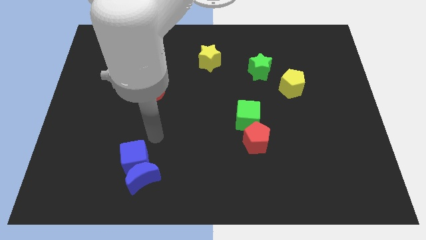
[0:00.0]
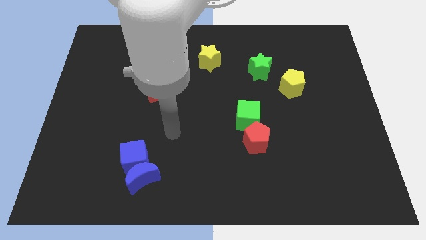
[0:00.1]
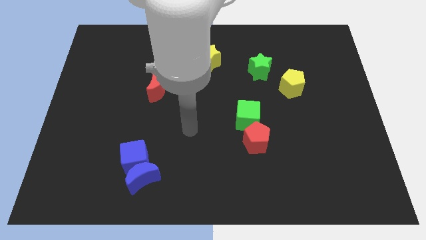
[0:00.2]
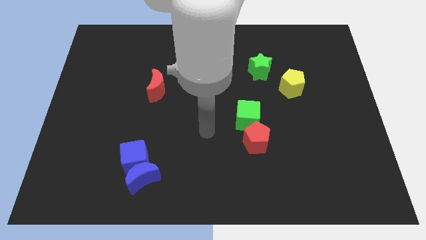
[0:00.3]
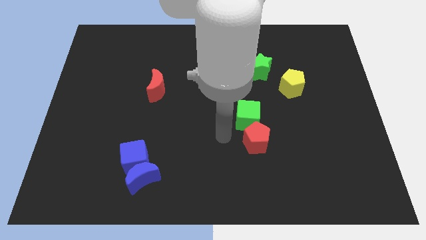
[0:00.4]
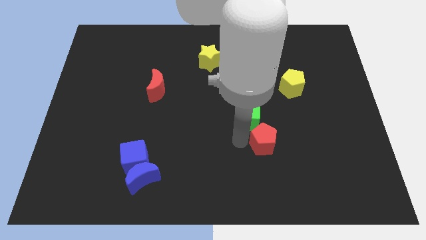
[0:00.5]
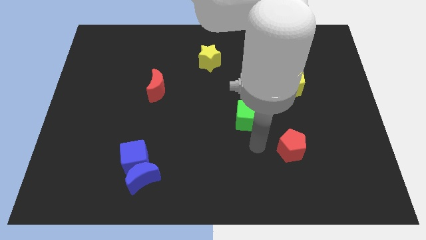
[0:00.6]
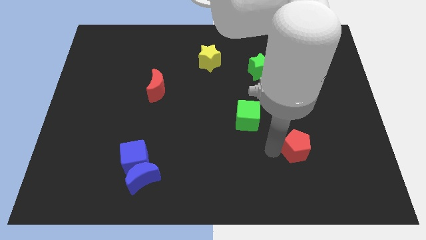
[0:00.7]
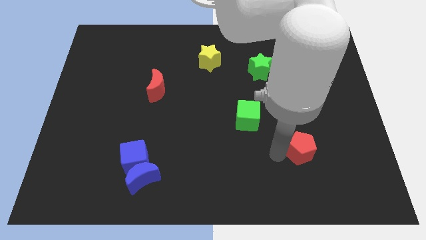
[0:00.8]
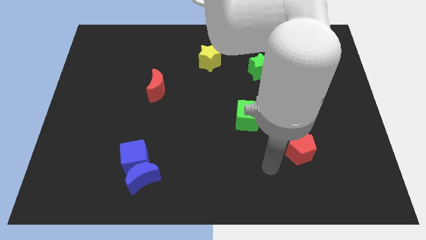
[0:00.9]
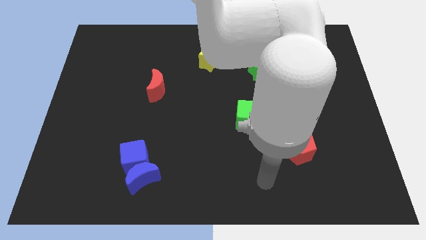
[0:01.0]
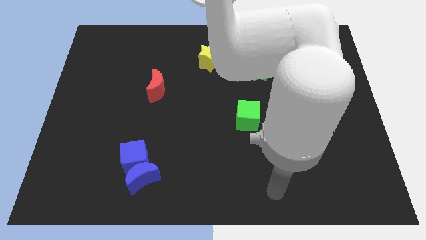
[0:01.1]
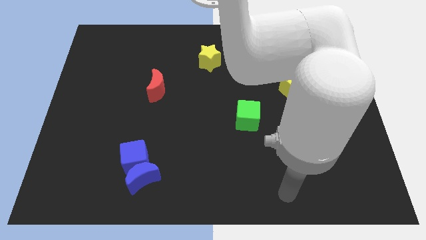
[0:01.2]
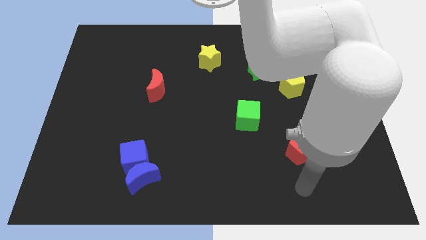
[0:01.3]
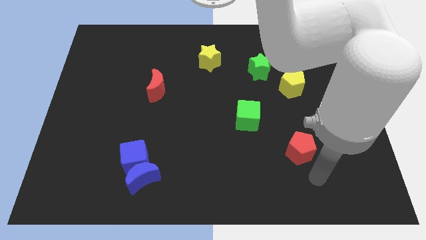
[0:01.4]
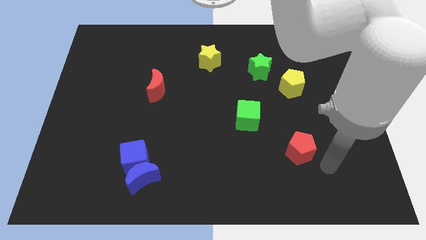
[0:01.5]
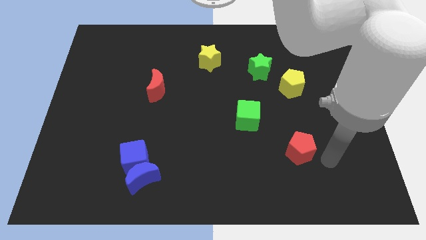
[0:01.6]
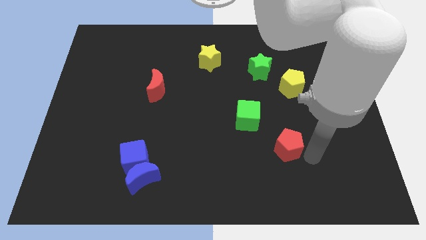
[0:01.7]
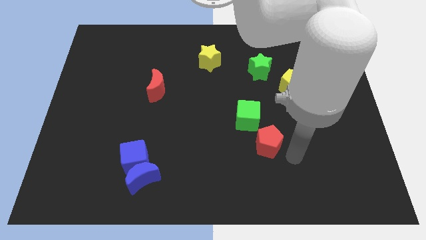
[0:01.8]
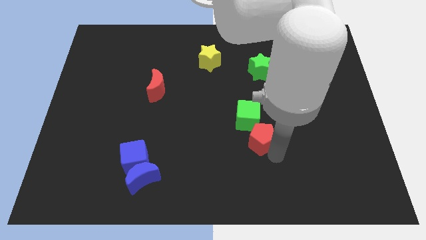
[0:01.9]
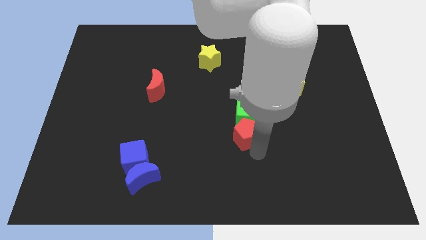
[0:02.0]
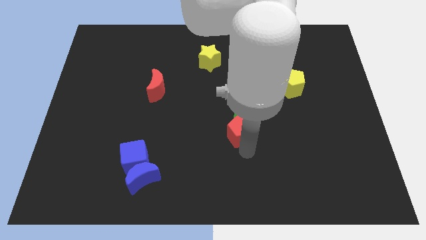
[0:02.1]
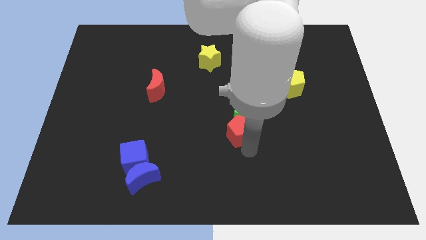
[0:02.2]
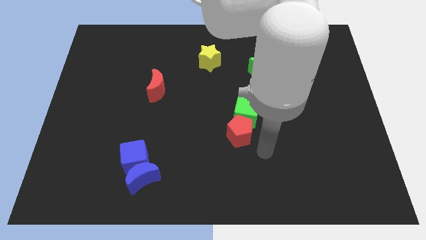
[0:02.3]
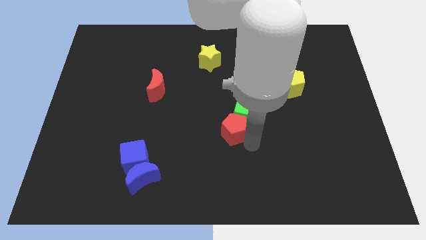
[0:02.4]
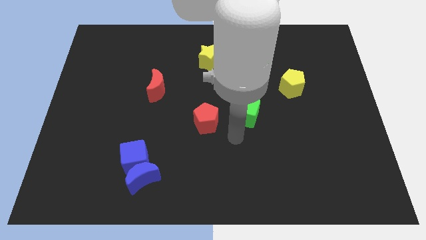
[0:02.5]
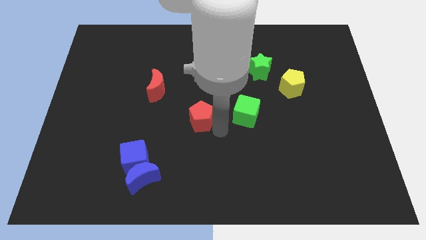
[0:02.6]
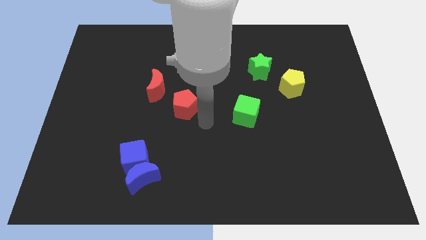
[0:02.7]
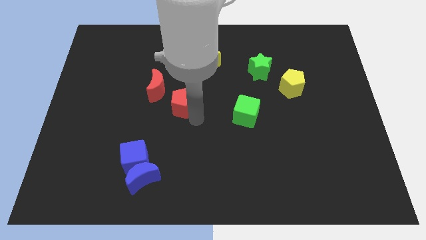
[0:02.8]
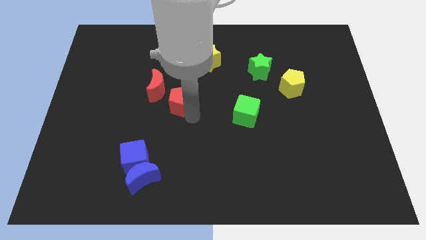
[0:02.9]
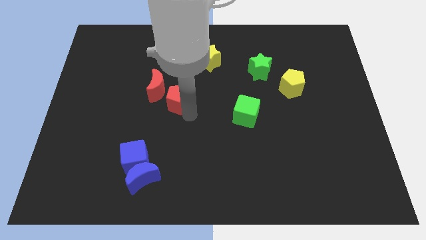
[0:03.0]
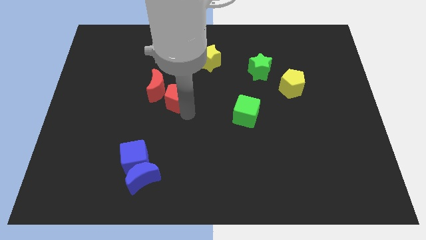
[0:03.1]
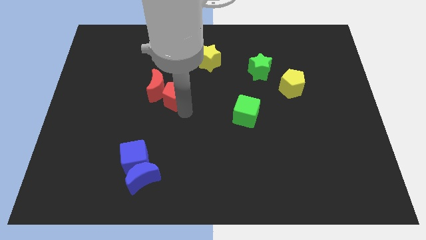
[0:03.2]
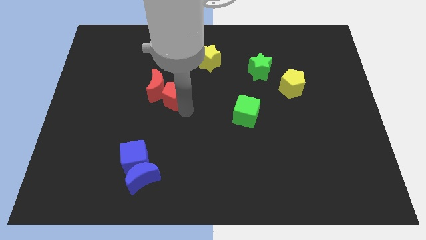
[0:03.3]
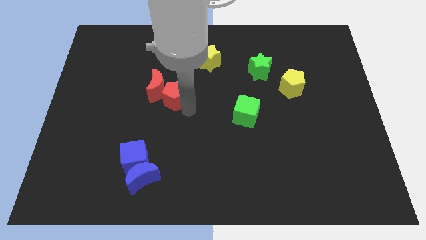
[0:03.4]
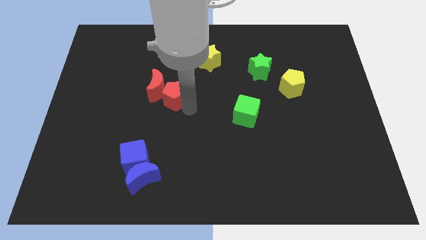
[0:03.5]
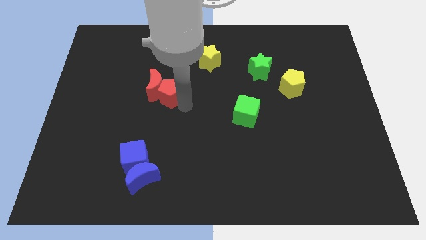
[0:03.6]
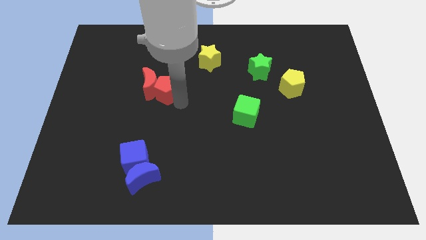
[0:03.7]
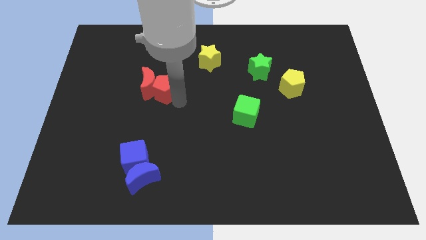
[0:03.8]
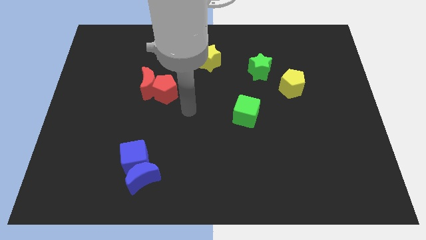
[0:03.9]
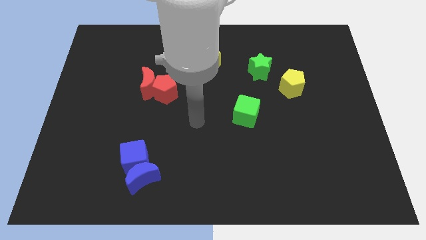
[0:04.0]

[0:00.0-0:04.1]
move the red pentagon towards the red crescent

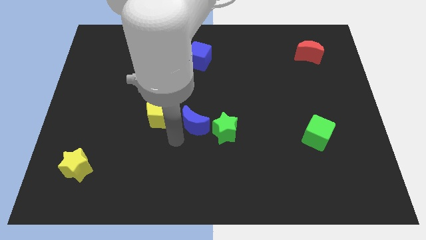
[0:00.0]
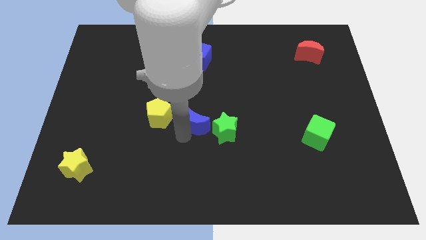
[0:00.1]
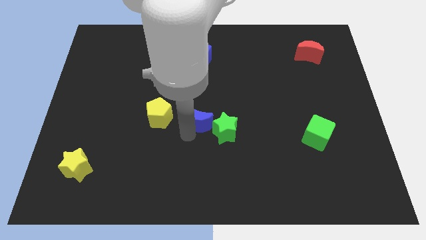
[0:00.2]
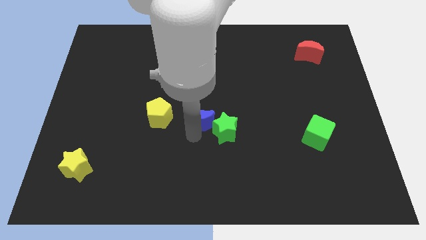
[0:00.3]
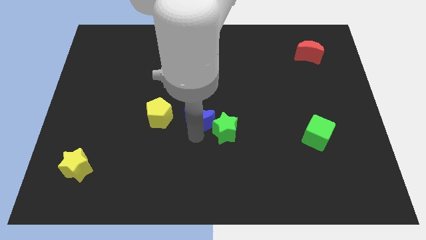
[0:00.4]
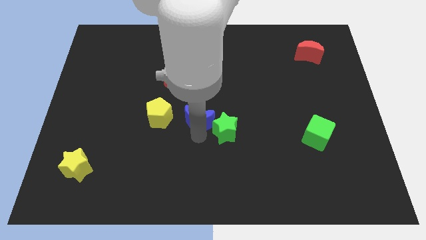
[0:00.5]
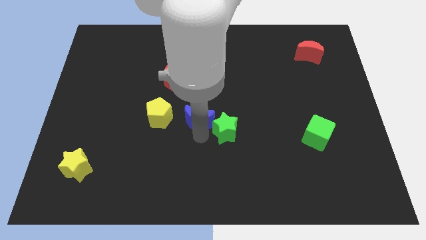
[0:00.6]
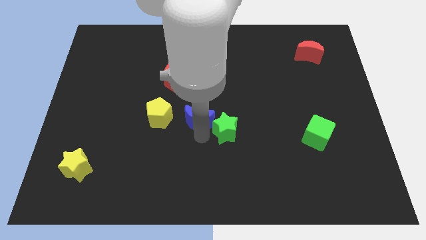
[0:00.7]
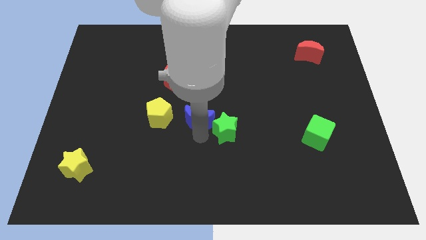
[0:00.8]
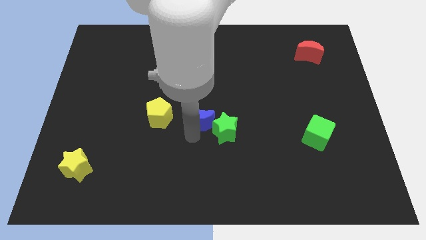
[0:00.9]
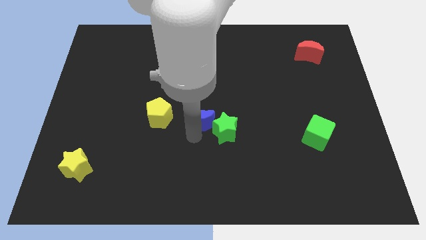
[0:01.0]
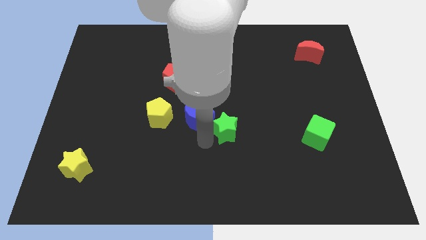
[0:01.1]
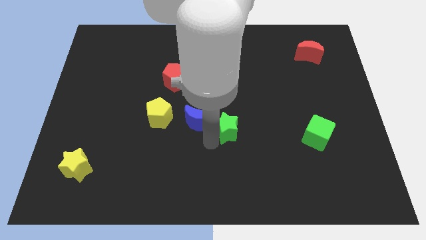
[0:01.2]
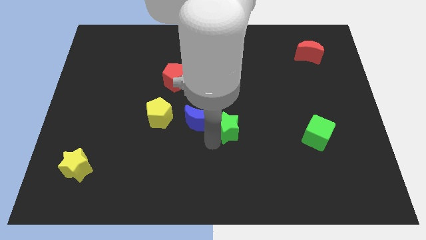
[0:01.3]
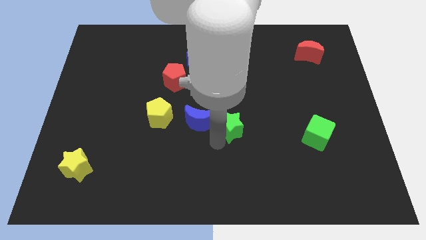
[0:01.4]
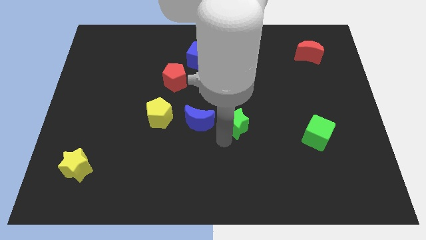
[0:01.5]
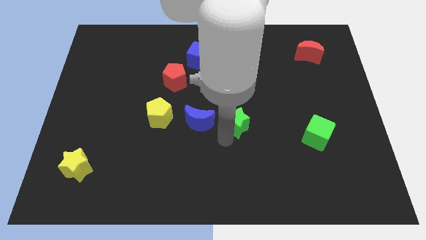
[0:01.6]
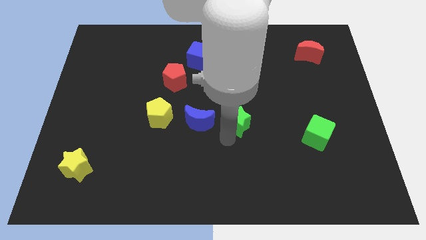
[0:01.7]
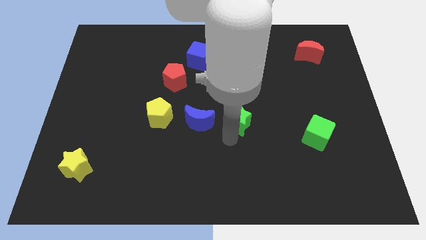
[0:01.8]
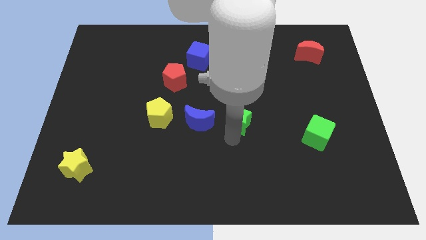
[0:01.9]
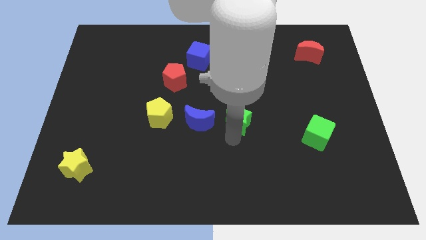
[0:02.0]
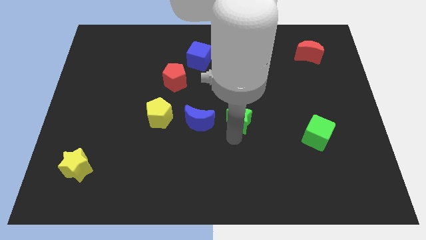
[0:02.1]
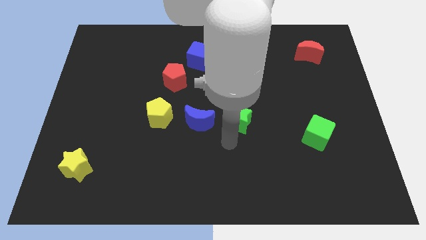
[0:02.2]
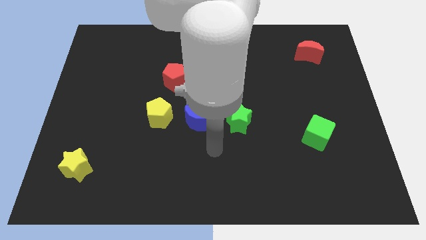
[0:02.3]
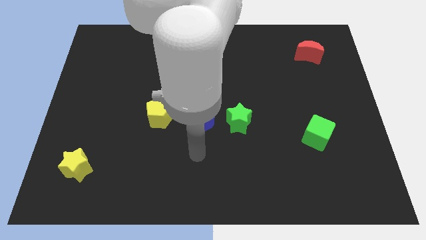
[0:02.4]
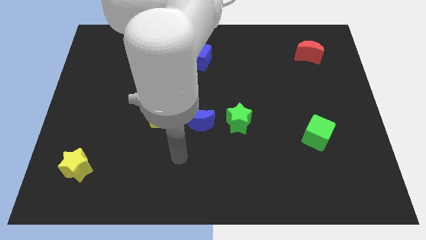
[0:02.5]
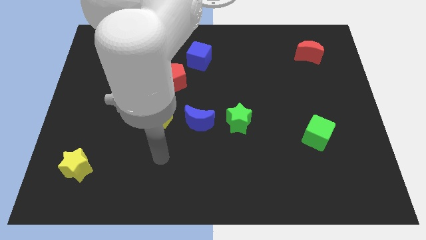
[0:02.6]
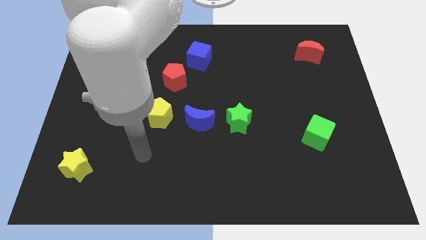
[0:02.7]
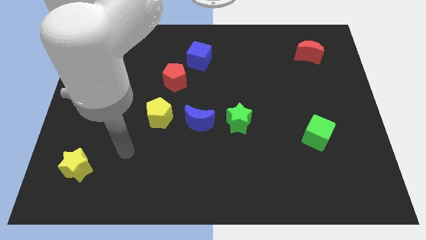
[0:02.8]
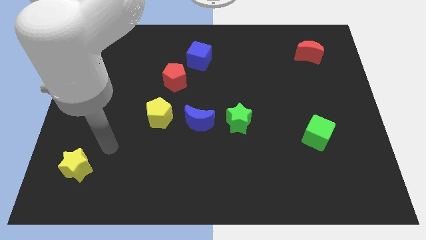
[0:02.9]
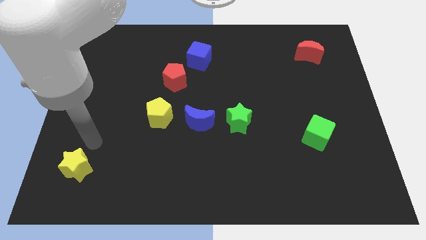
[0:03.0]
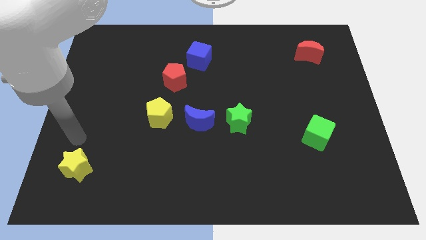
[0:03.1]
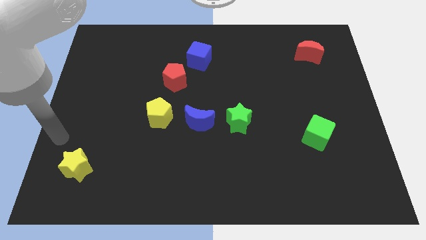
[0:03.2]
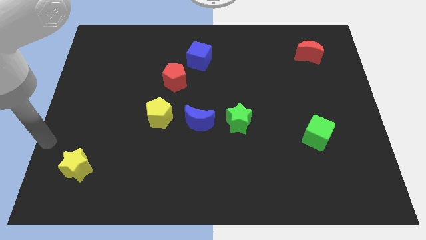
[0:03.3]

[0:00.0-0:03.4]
place the blue crescent and green star horizontally to the right side of the yellow pentagon

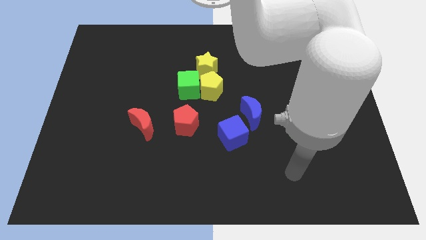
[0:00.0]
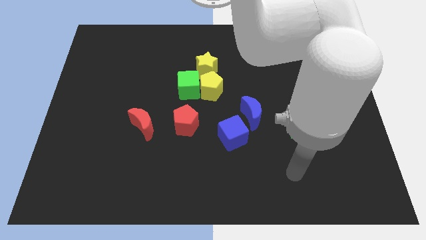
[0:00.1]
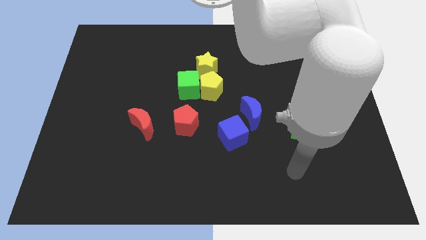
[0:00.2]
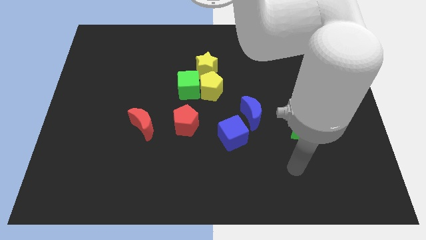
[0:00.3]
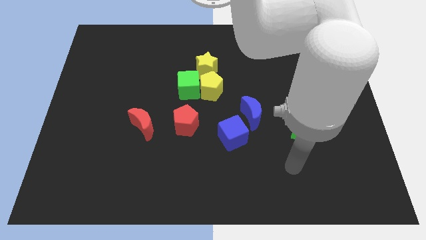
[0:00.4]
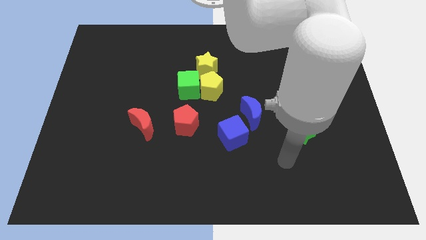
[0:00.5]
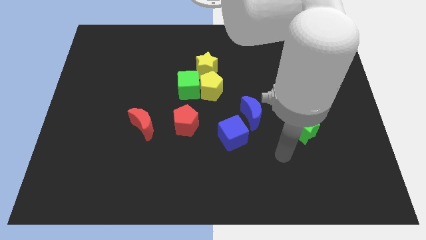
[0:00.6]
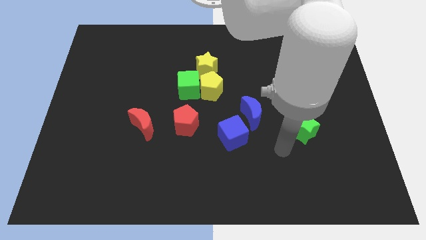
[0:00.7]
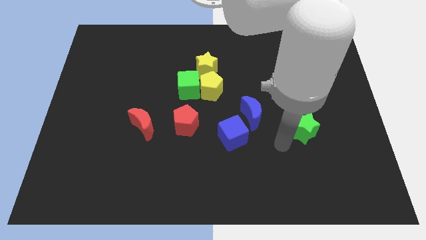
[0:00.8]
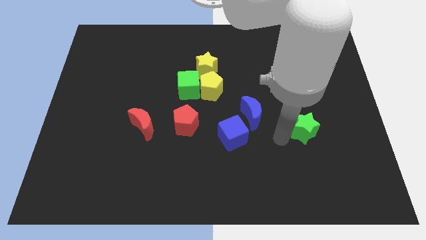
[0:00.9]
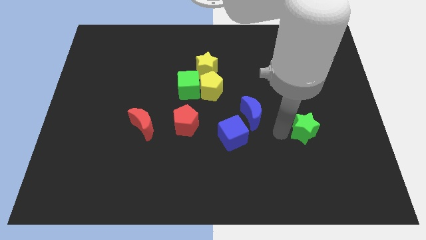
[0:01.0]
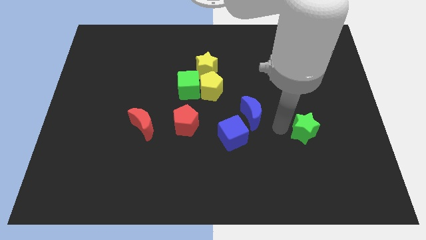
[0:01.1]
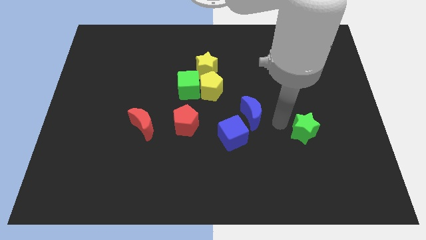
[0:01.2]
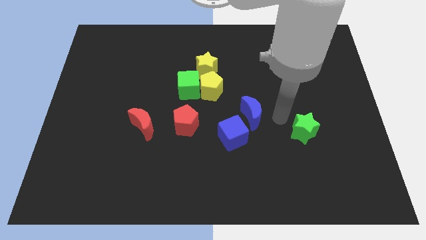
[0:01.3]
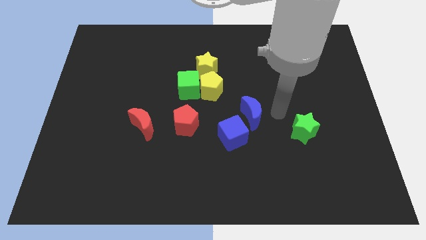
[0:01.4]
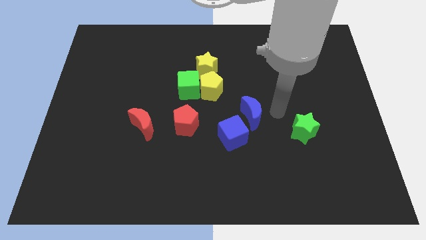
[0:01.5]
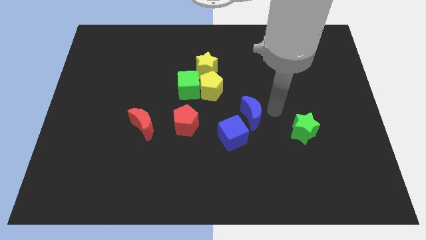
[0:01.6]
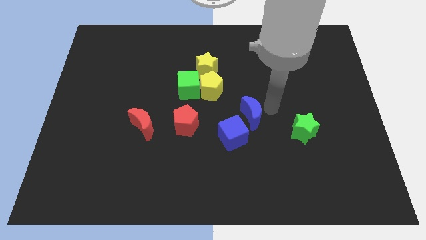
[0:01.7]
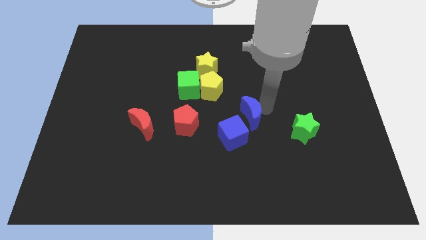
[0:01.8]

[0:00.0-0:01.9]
move your arm to the right of the blue crescent
